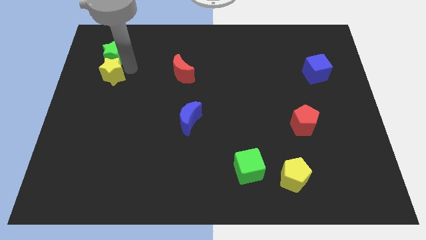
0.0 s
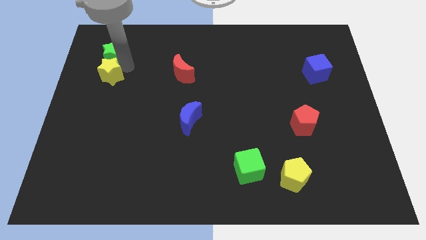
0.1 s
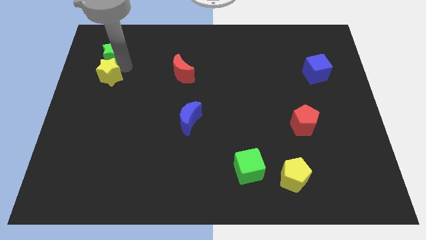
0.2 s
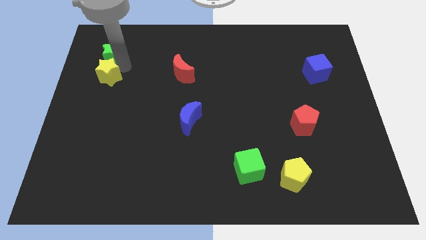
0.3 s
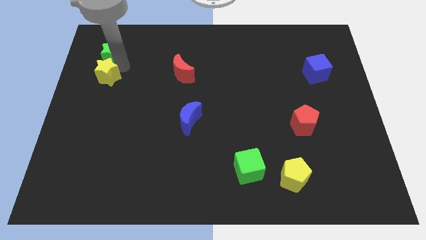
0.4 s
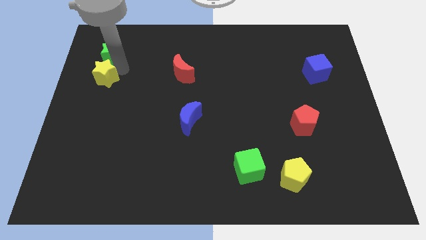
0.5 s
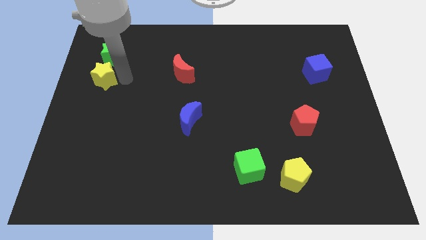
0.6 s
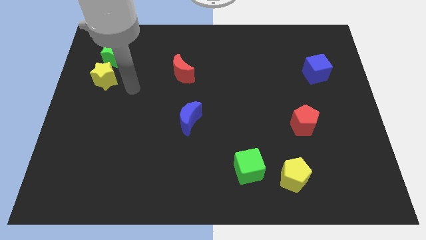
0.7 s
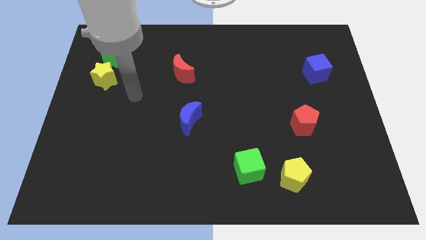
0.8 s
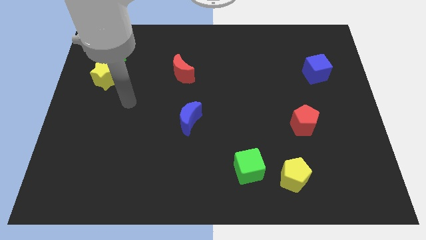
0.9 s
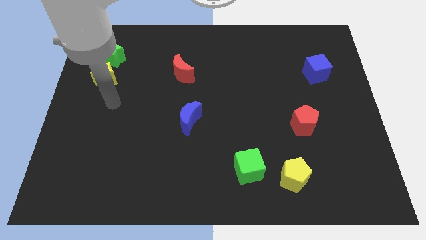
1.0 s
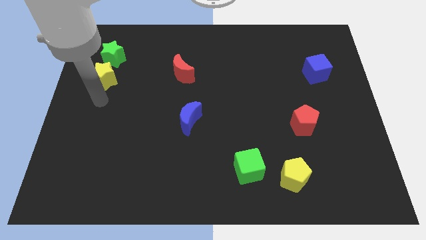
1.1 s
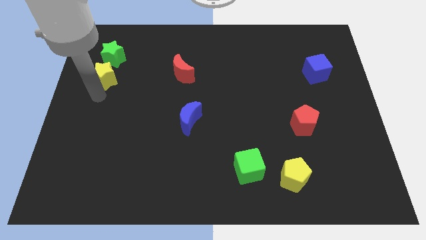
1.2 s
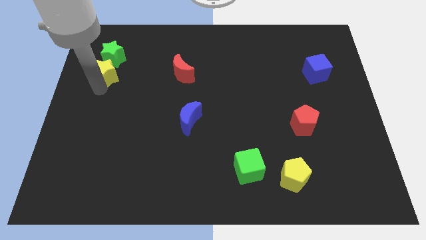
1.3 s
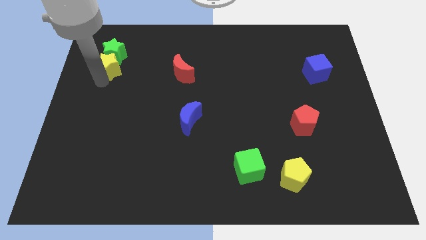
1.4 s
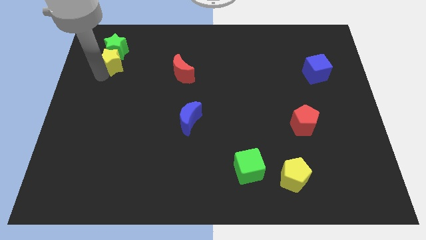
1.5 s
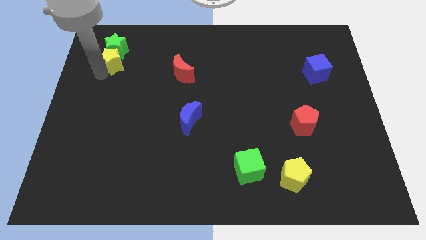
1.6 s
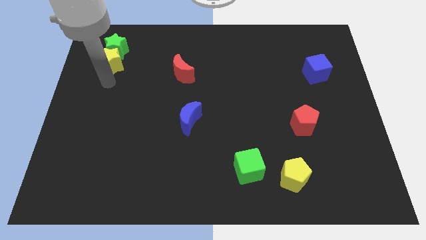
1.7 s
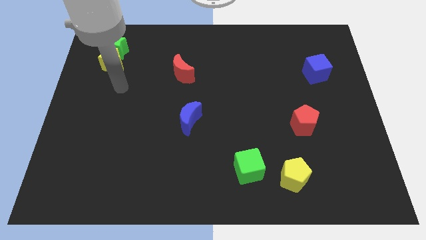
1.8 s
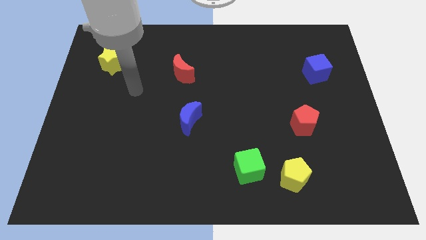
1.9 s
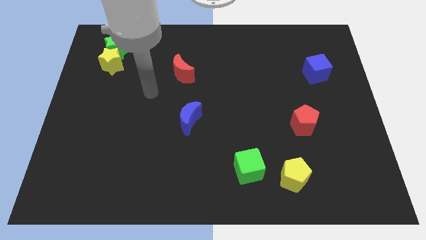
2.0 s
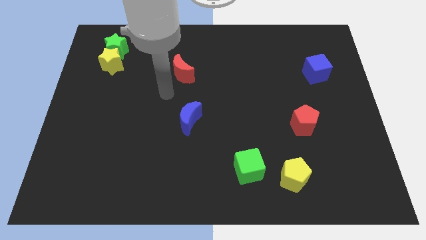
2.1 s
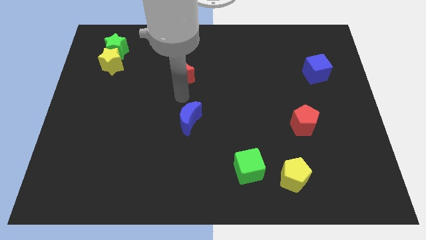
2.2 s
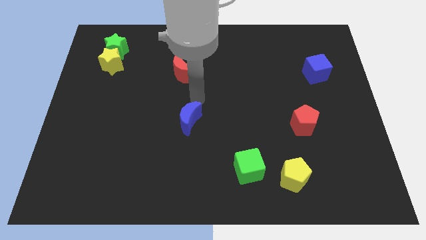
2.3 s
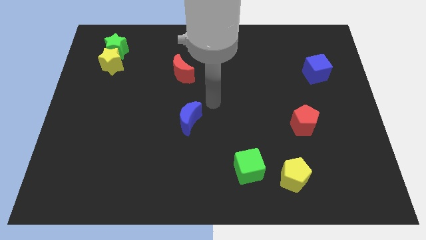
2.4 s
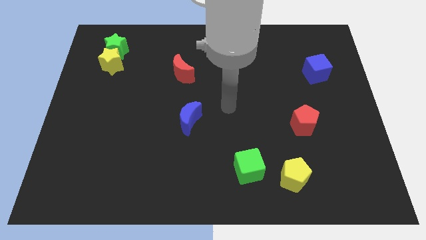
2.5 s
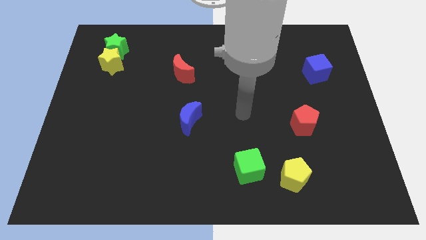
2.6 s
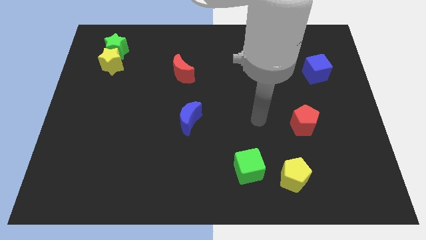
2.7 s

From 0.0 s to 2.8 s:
move yellow star towards upward

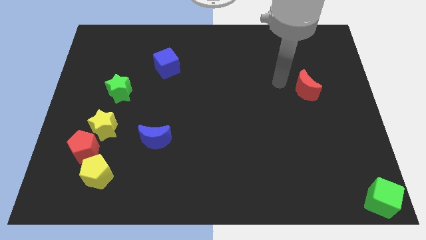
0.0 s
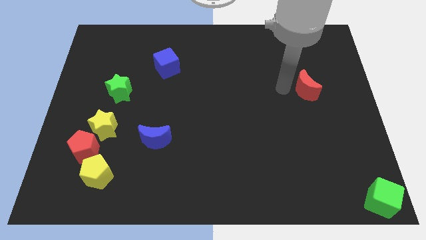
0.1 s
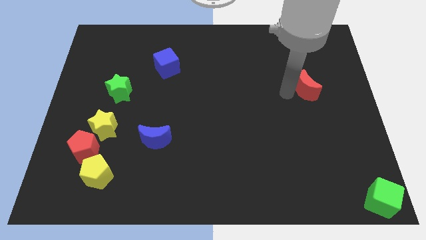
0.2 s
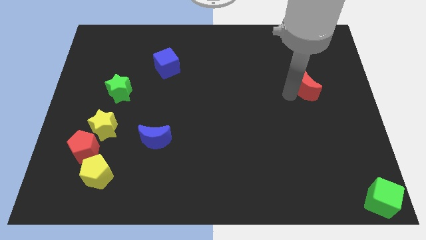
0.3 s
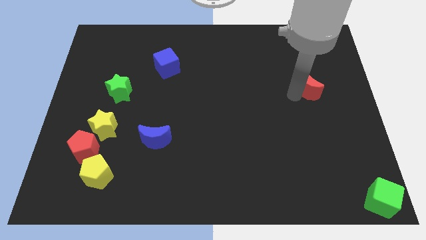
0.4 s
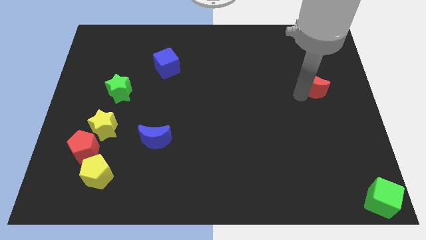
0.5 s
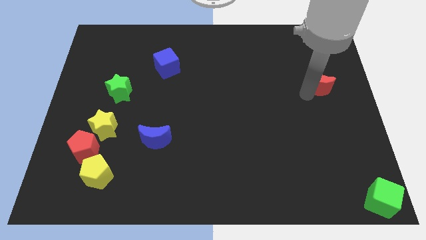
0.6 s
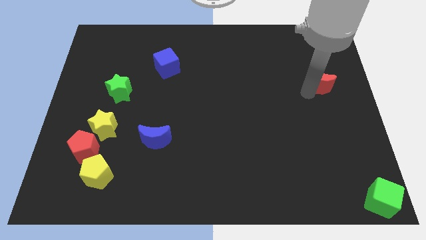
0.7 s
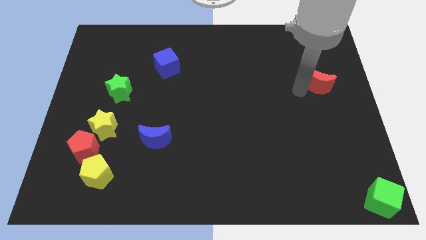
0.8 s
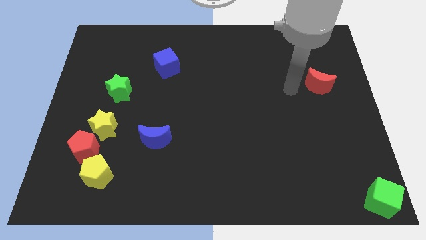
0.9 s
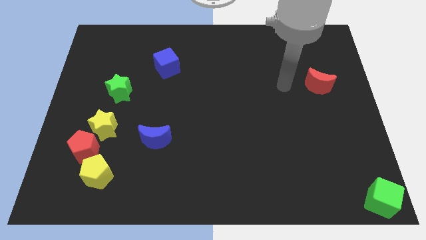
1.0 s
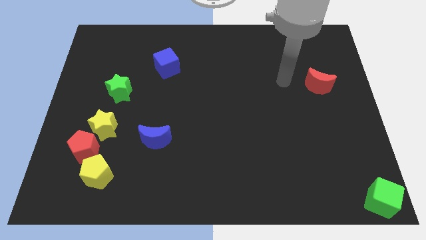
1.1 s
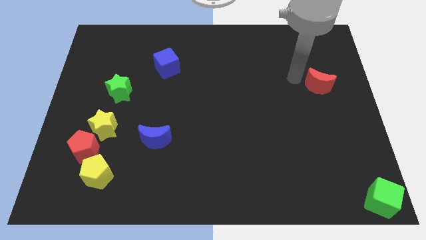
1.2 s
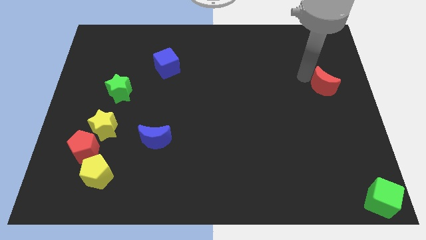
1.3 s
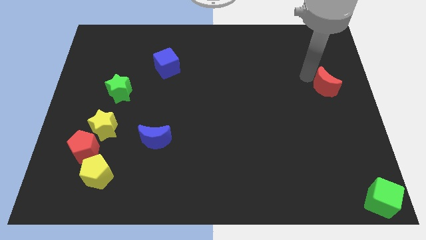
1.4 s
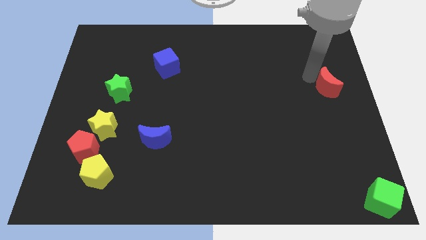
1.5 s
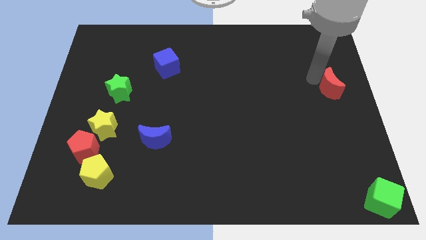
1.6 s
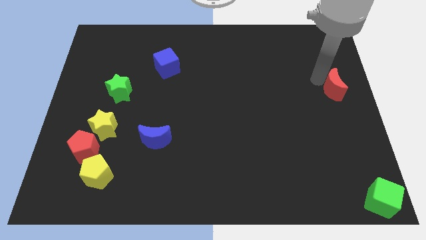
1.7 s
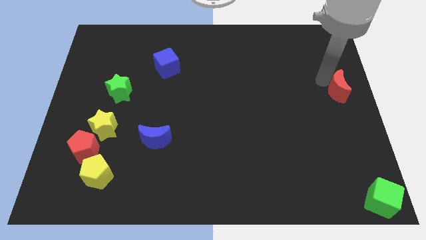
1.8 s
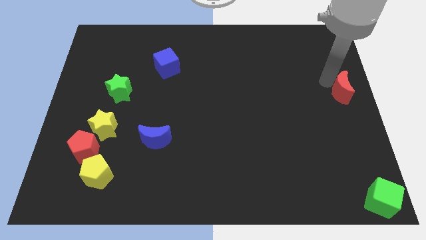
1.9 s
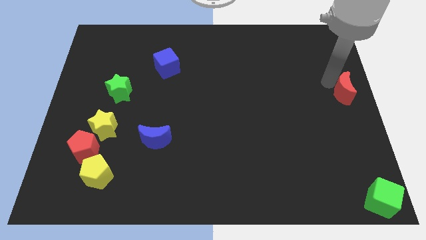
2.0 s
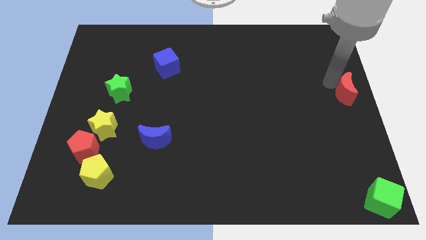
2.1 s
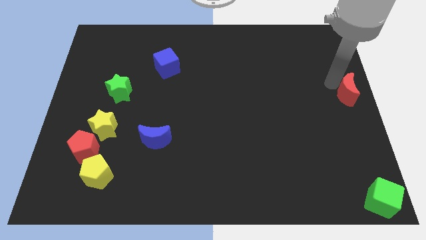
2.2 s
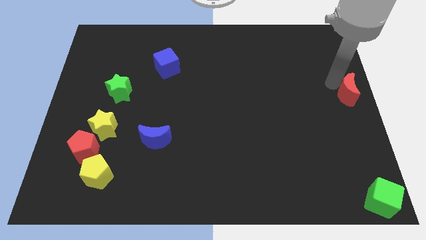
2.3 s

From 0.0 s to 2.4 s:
push the red moon to the right side of the board

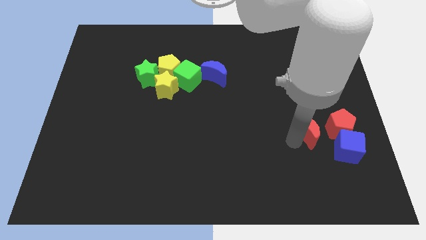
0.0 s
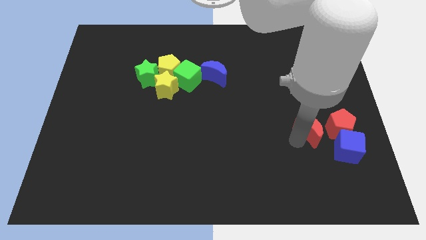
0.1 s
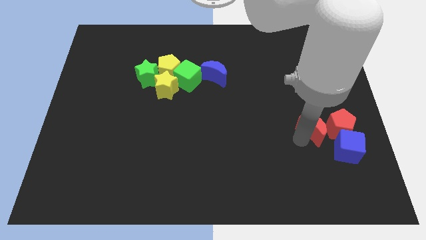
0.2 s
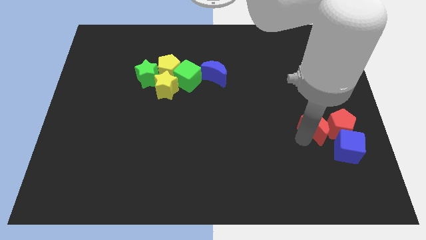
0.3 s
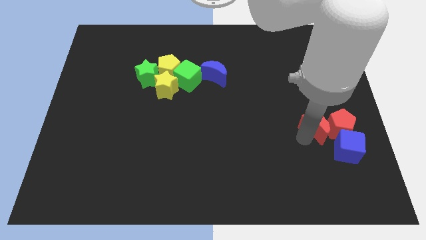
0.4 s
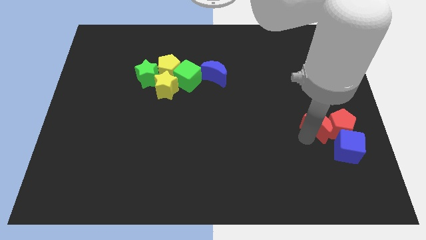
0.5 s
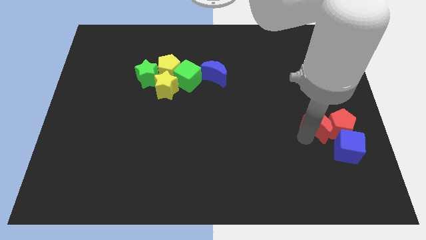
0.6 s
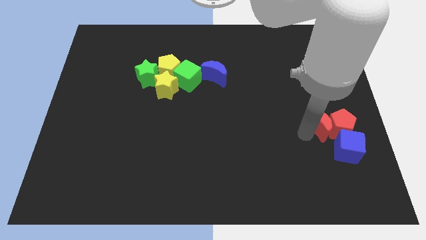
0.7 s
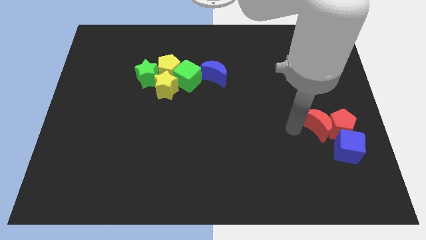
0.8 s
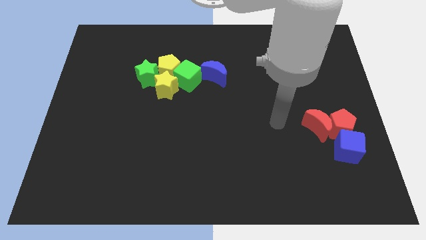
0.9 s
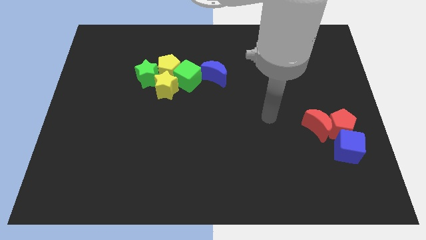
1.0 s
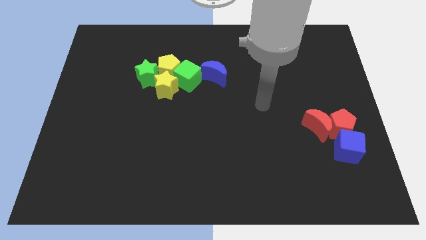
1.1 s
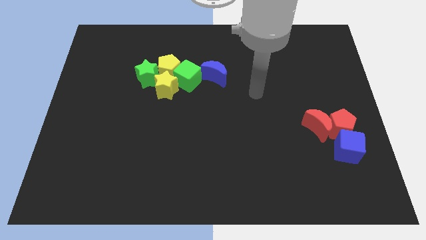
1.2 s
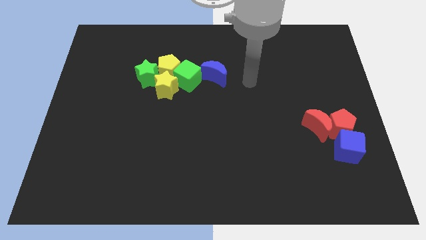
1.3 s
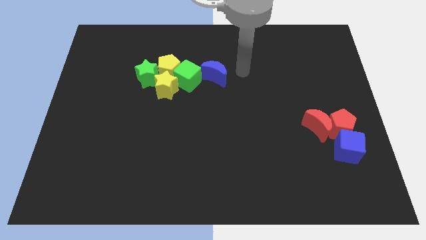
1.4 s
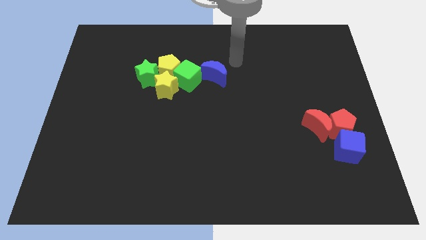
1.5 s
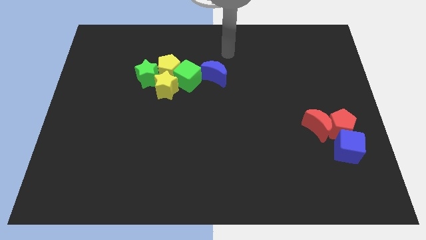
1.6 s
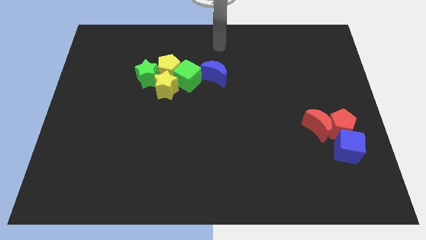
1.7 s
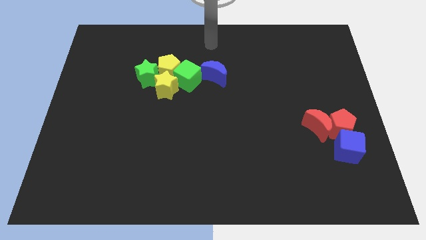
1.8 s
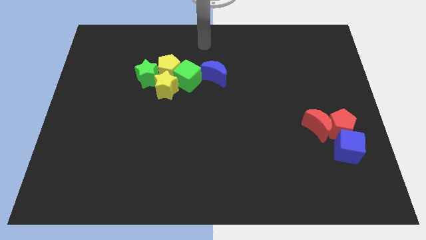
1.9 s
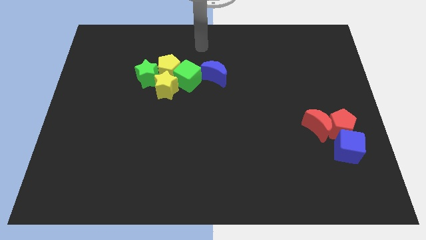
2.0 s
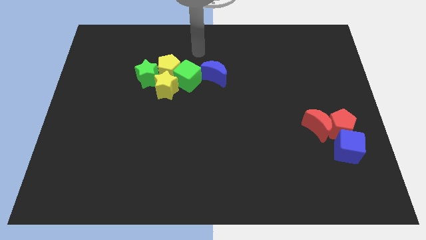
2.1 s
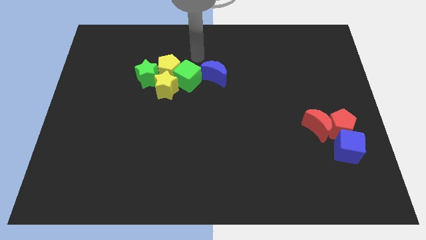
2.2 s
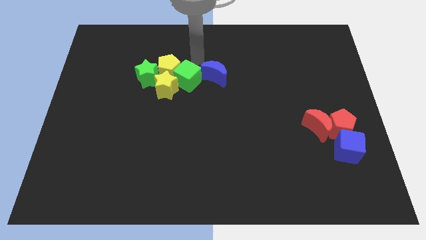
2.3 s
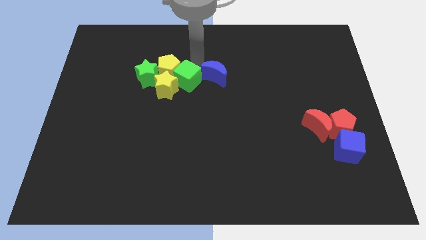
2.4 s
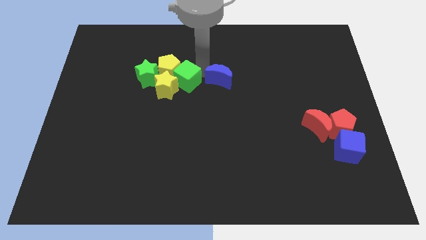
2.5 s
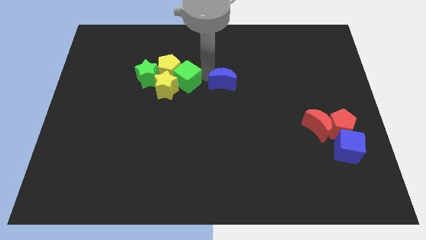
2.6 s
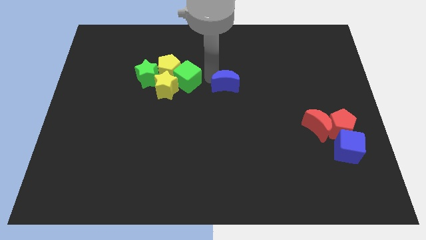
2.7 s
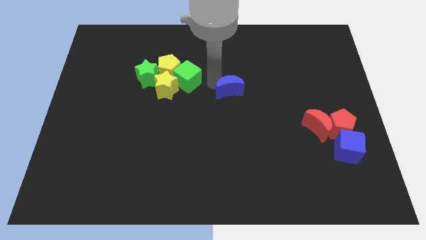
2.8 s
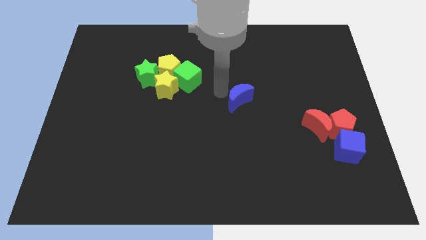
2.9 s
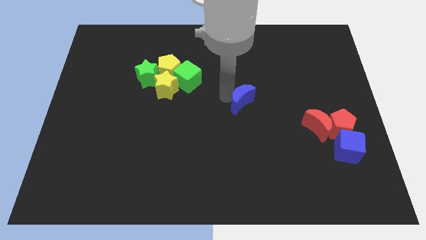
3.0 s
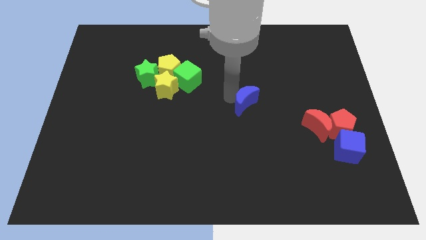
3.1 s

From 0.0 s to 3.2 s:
separate blue moon from the green cube

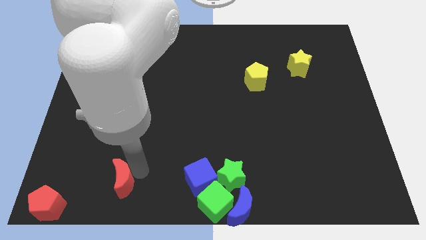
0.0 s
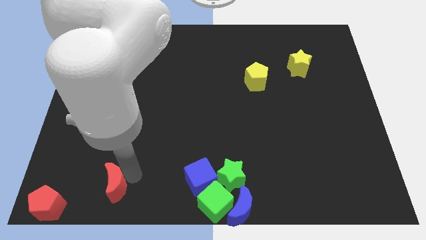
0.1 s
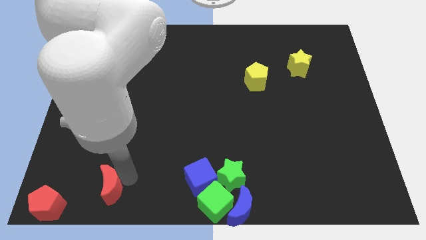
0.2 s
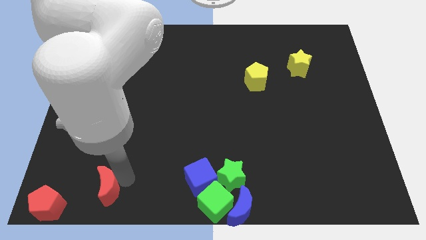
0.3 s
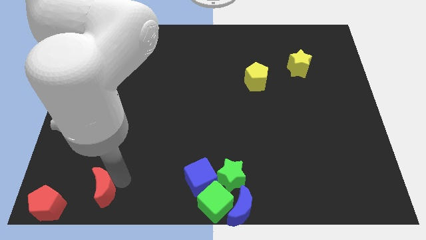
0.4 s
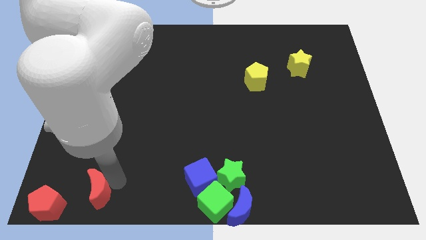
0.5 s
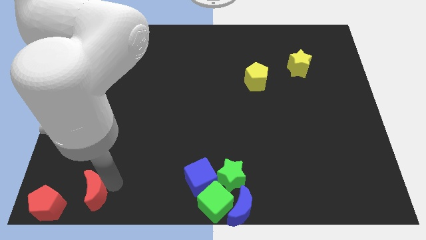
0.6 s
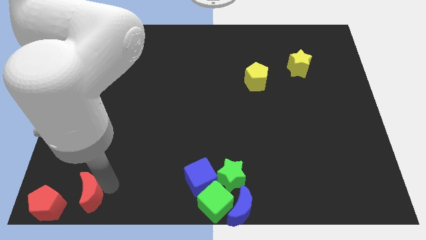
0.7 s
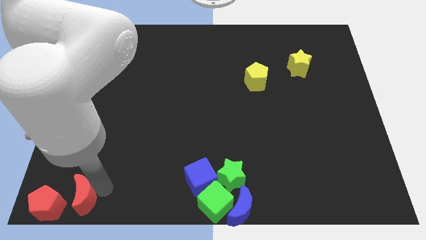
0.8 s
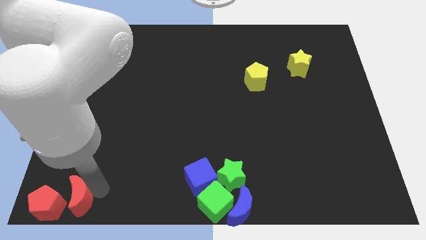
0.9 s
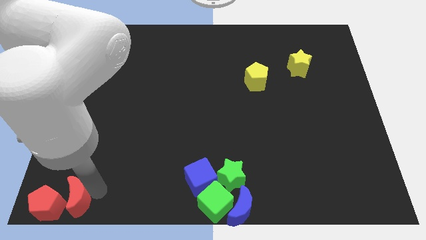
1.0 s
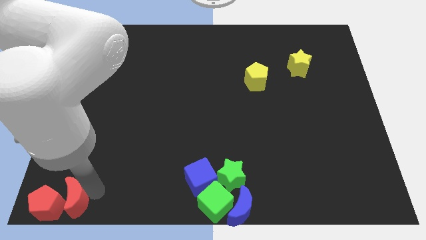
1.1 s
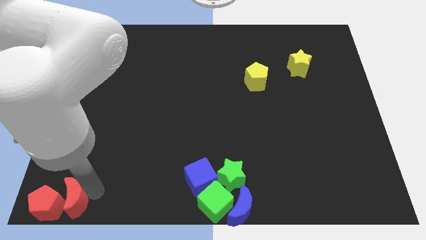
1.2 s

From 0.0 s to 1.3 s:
move the red crescent slightly towards the red pentagon
